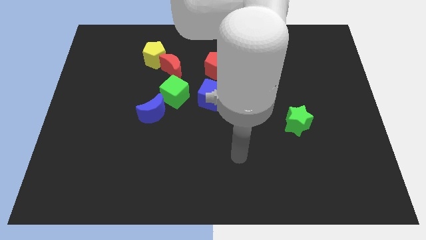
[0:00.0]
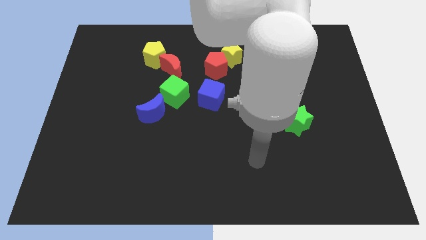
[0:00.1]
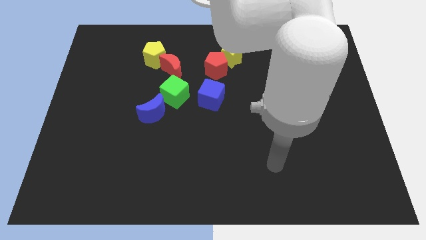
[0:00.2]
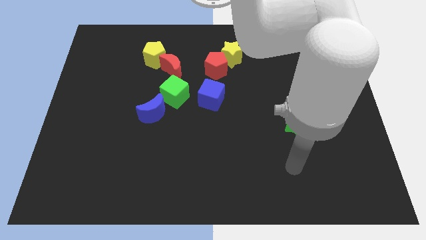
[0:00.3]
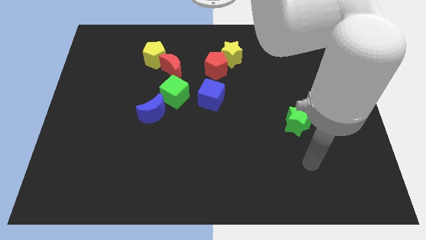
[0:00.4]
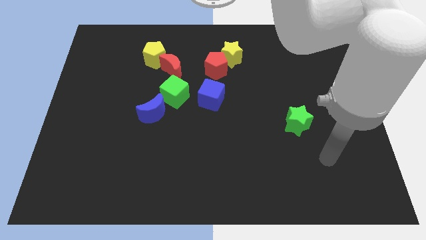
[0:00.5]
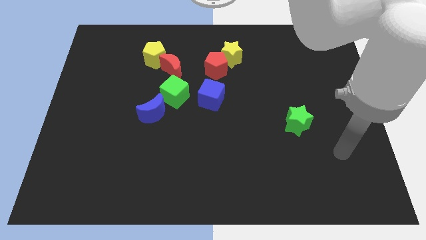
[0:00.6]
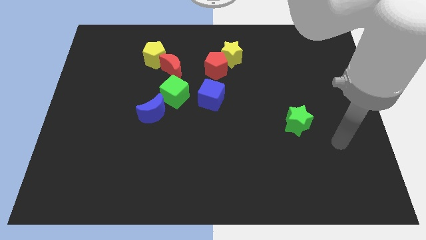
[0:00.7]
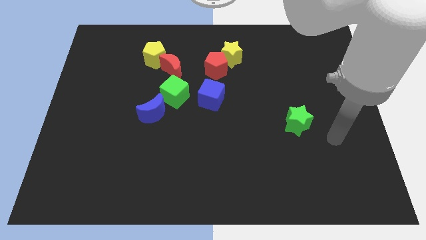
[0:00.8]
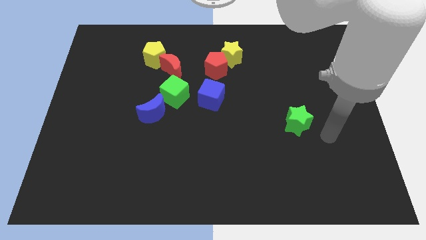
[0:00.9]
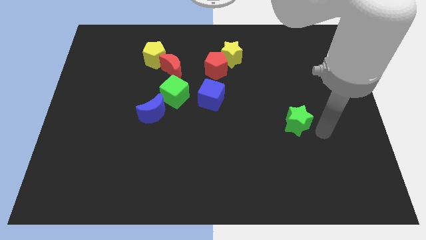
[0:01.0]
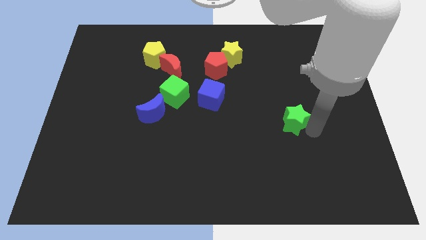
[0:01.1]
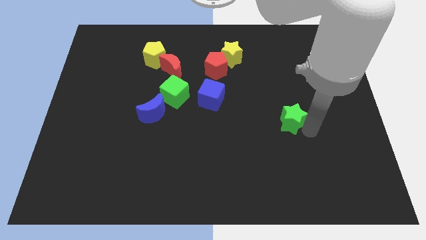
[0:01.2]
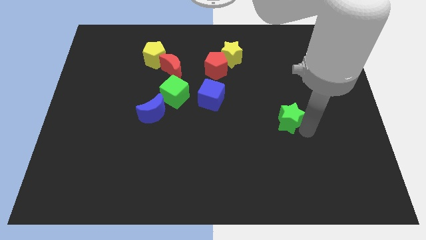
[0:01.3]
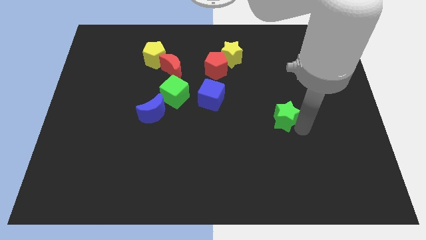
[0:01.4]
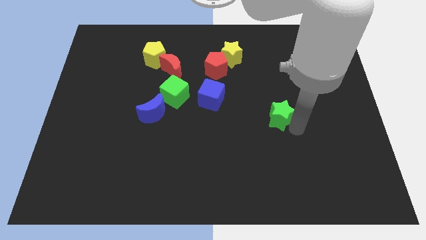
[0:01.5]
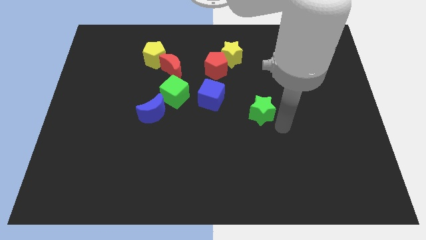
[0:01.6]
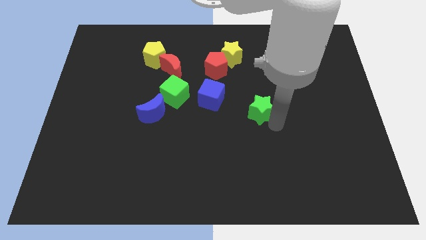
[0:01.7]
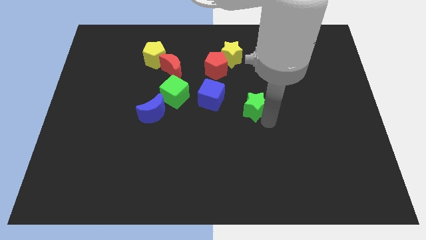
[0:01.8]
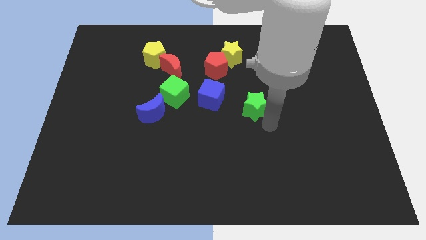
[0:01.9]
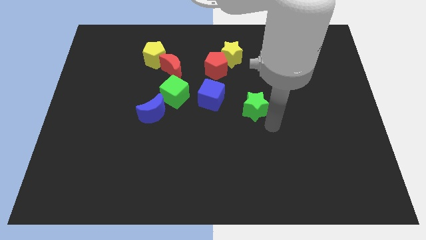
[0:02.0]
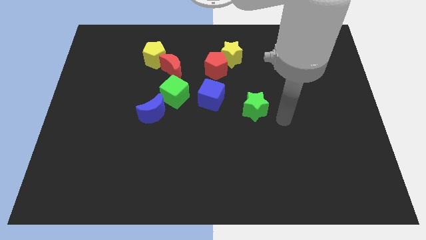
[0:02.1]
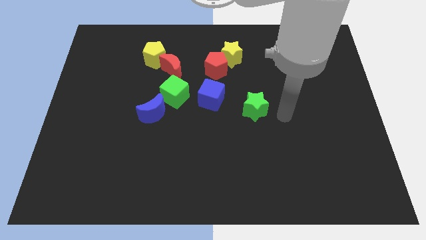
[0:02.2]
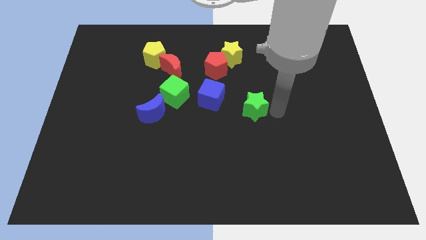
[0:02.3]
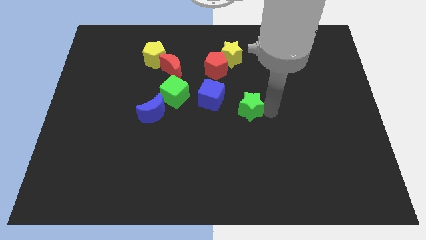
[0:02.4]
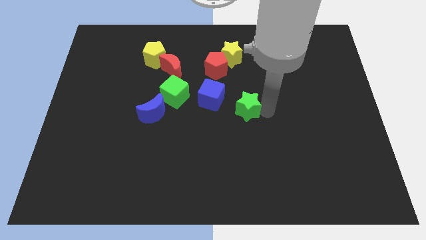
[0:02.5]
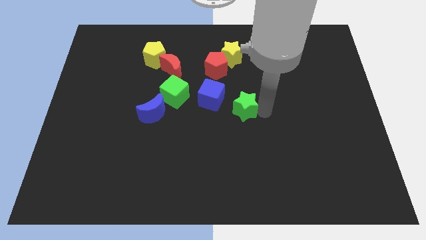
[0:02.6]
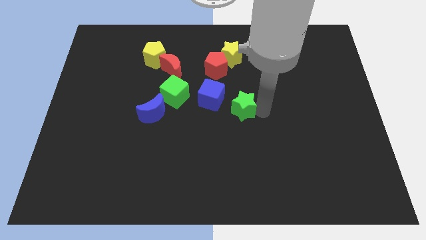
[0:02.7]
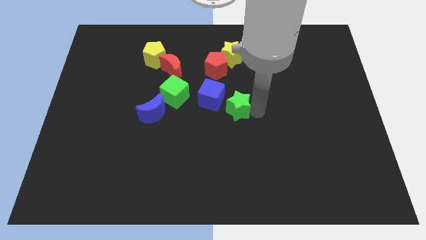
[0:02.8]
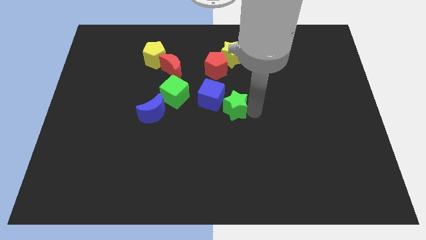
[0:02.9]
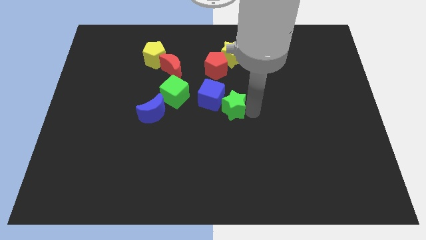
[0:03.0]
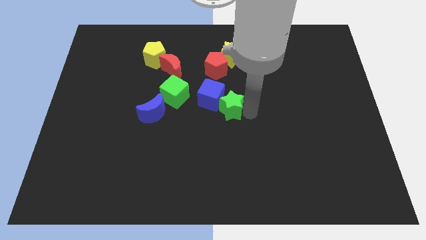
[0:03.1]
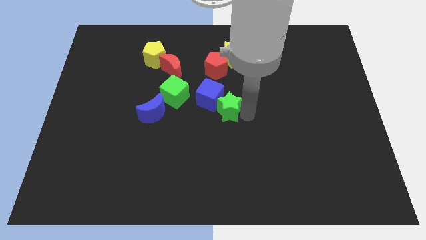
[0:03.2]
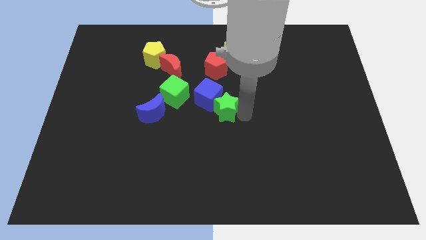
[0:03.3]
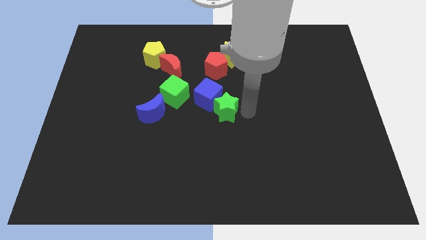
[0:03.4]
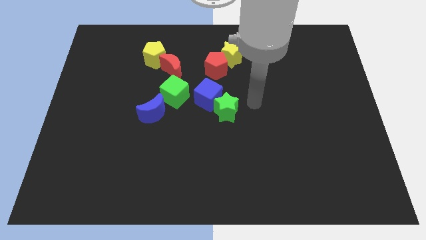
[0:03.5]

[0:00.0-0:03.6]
move the green star to the right below the blue cube

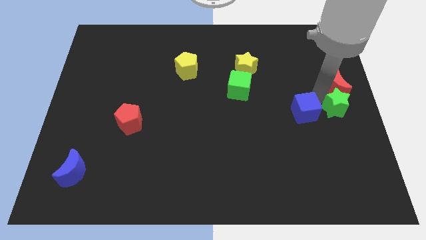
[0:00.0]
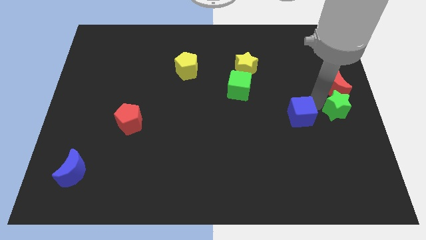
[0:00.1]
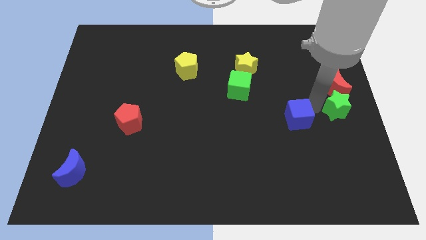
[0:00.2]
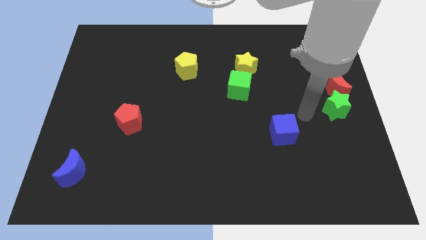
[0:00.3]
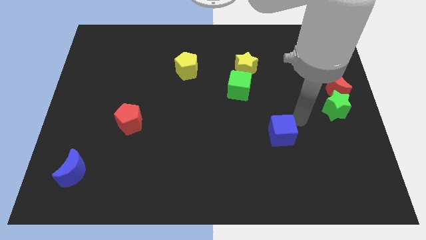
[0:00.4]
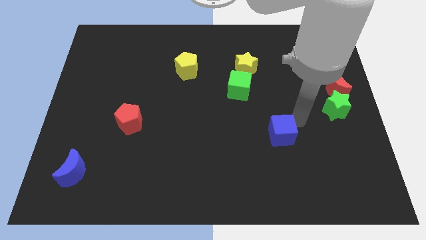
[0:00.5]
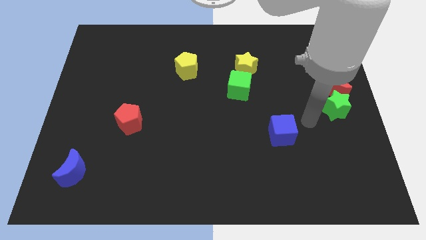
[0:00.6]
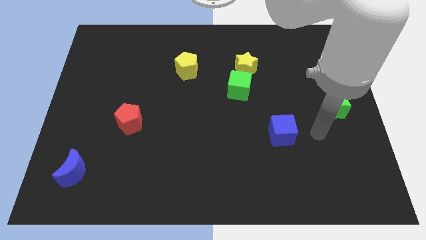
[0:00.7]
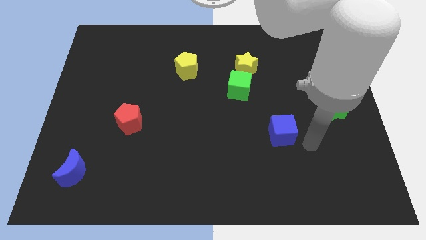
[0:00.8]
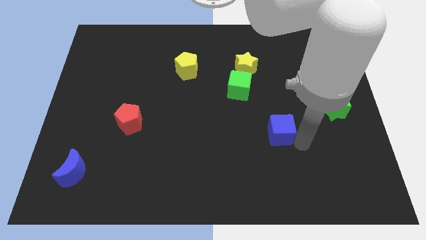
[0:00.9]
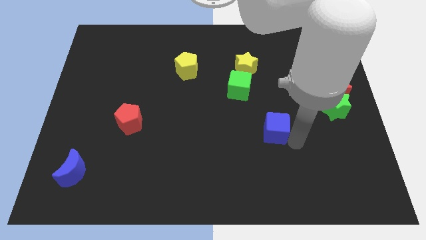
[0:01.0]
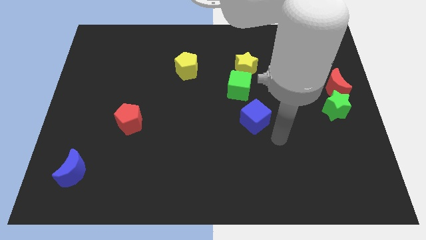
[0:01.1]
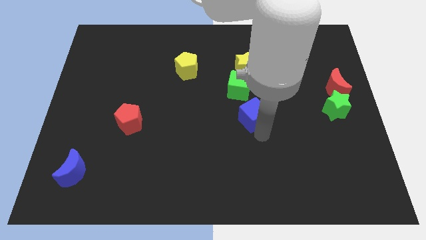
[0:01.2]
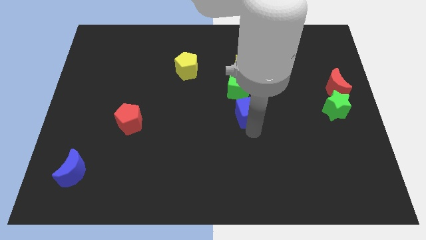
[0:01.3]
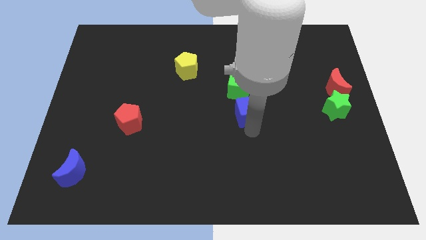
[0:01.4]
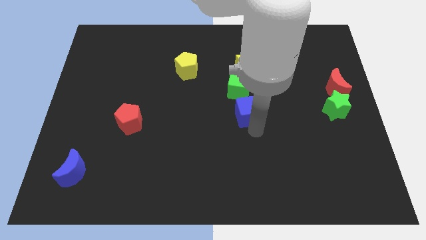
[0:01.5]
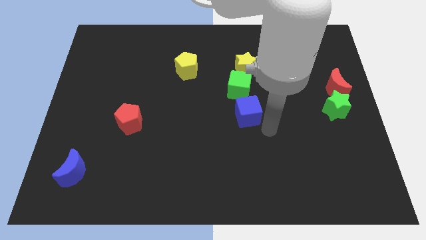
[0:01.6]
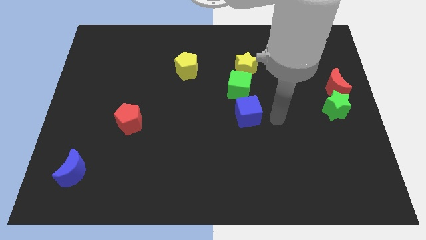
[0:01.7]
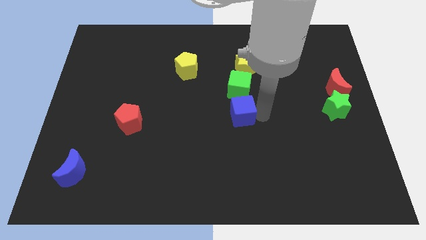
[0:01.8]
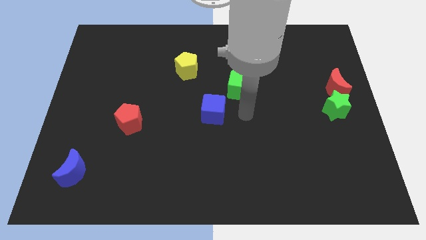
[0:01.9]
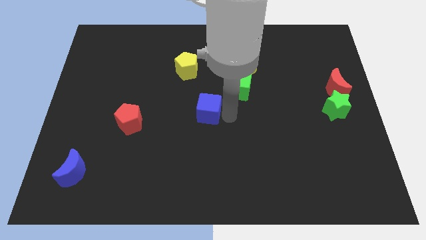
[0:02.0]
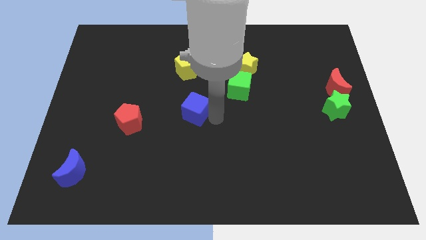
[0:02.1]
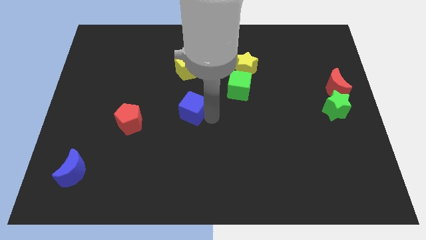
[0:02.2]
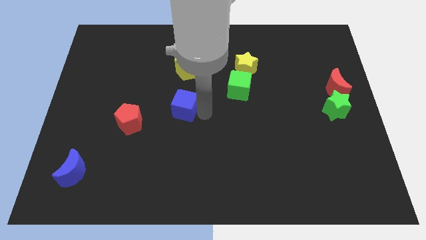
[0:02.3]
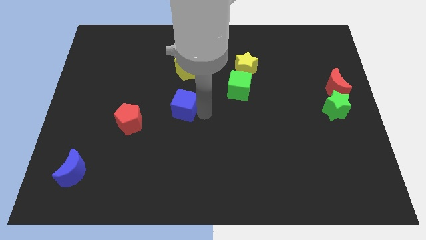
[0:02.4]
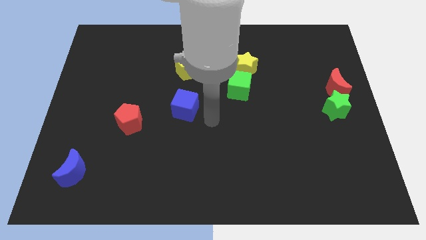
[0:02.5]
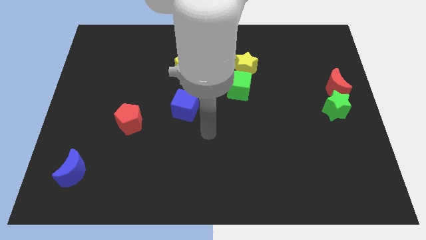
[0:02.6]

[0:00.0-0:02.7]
place the blue cube diagonally top right to the red pentagon

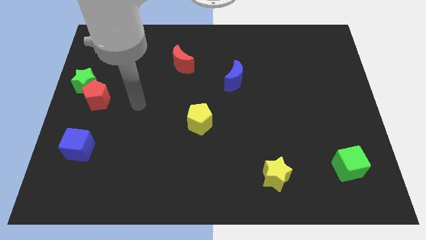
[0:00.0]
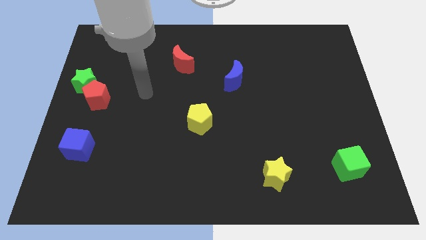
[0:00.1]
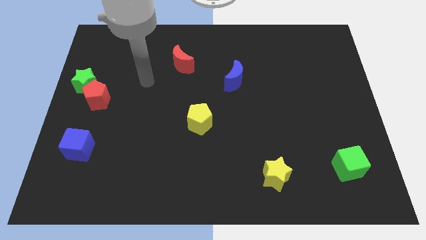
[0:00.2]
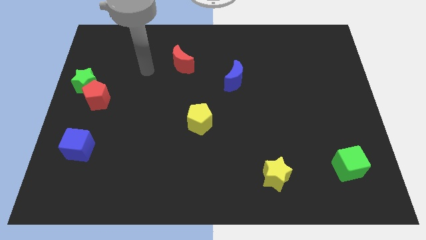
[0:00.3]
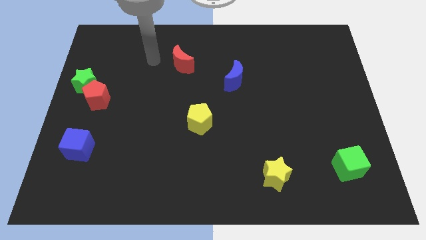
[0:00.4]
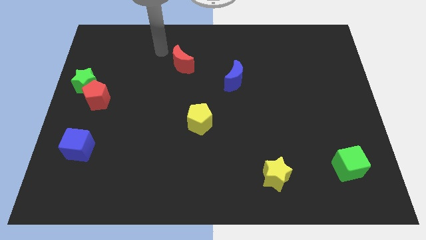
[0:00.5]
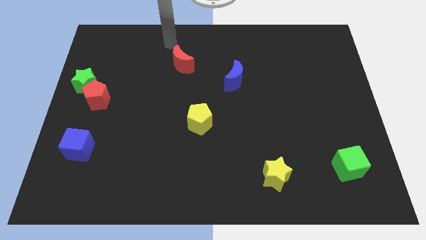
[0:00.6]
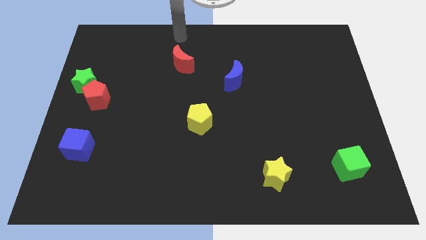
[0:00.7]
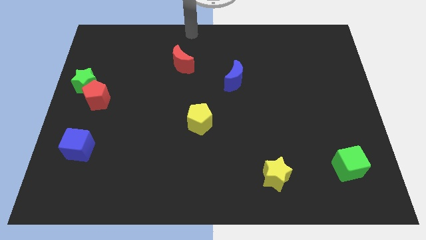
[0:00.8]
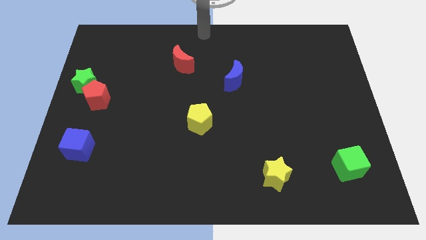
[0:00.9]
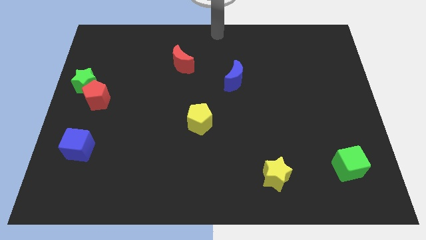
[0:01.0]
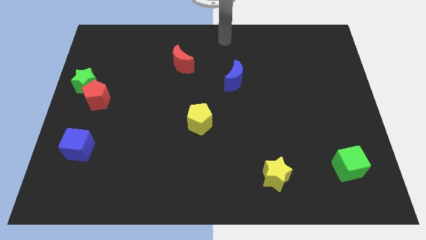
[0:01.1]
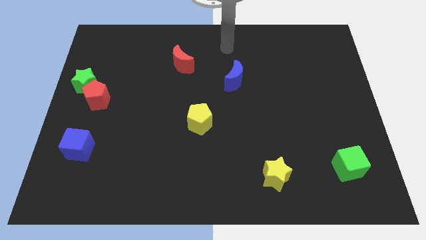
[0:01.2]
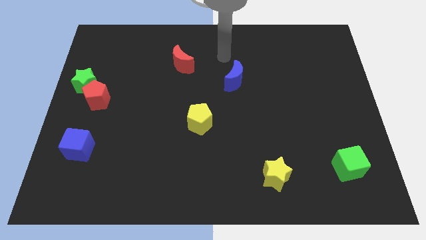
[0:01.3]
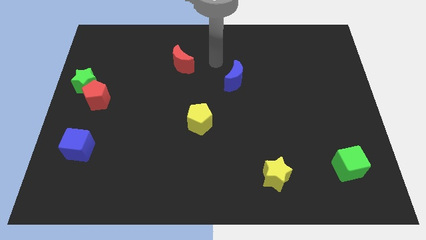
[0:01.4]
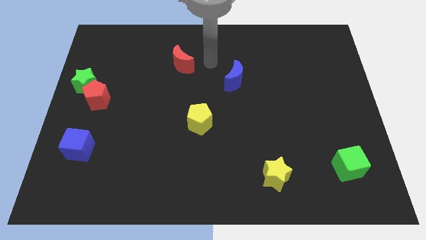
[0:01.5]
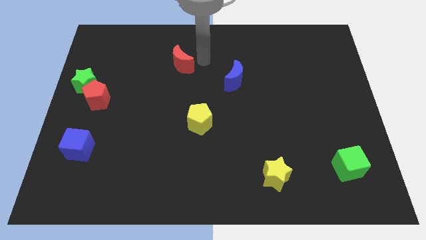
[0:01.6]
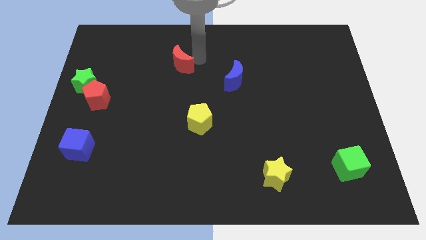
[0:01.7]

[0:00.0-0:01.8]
point your arm between red and blue moon

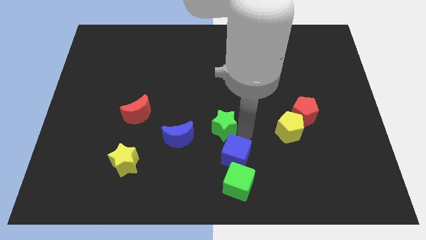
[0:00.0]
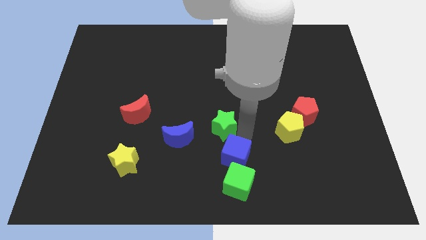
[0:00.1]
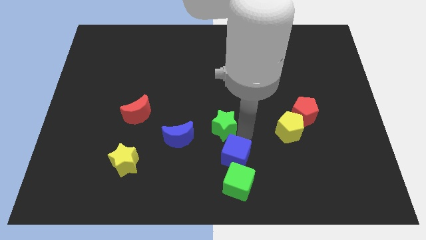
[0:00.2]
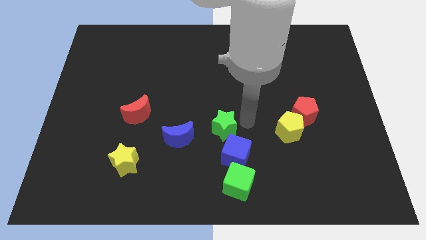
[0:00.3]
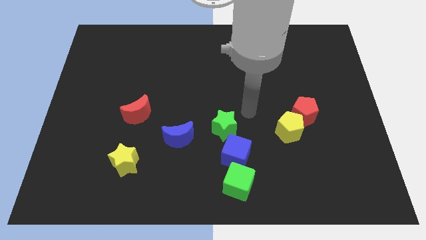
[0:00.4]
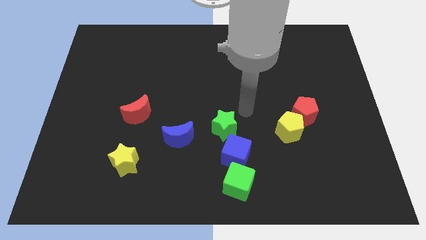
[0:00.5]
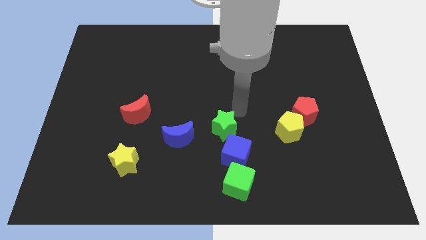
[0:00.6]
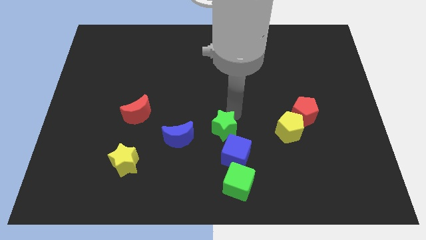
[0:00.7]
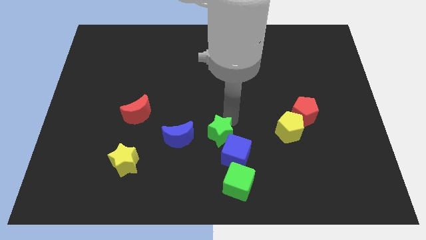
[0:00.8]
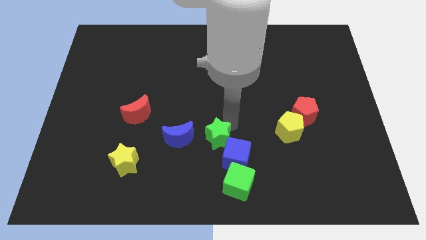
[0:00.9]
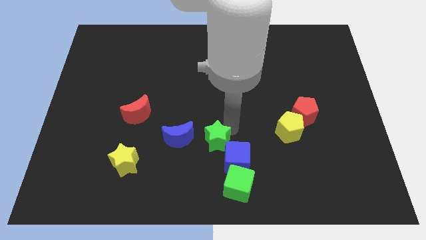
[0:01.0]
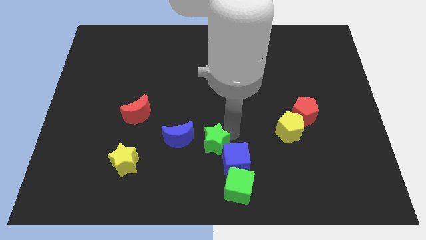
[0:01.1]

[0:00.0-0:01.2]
move the green star to the right of the blue crescent
